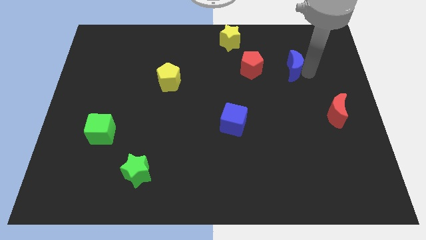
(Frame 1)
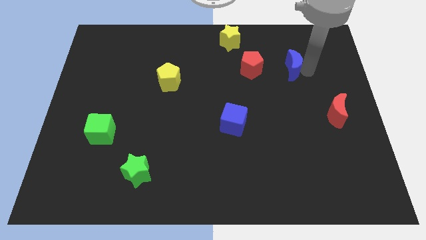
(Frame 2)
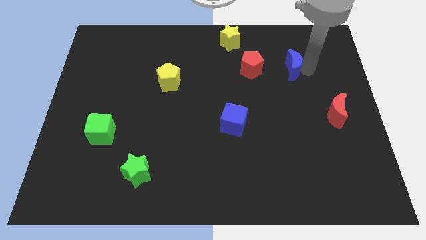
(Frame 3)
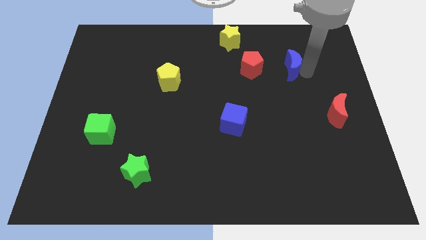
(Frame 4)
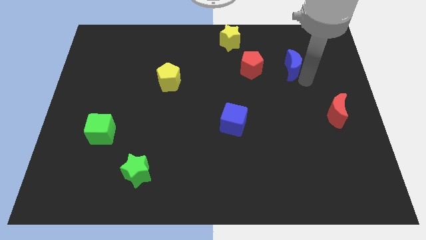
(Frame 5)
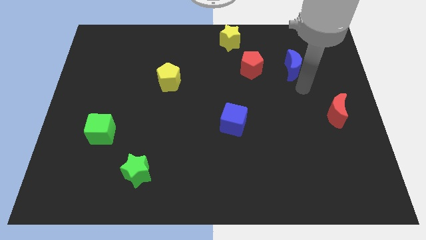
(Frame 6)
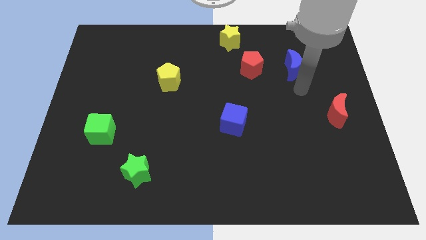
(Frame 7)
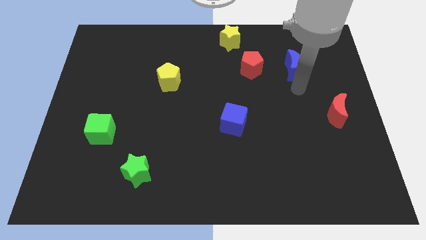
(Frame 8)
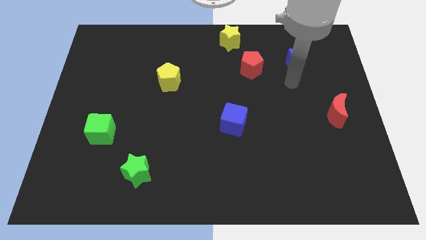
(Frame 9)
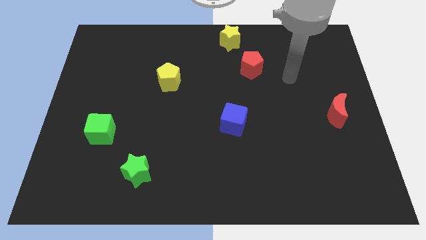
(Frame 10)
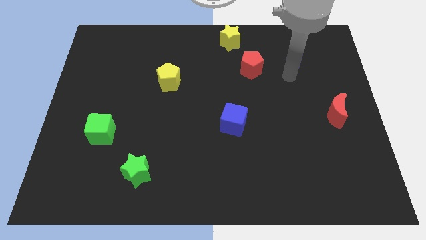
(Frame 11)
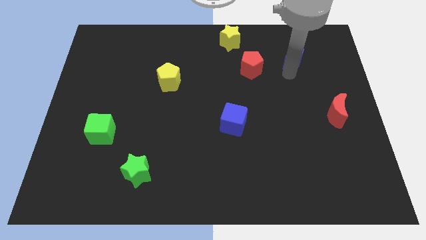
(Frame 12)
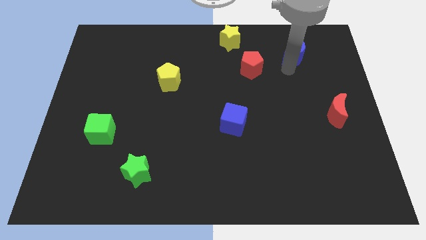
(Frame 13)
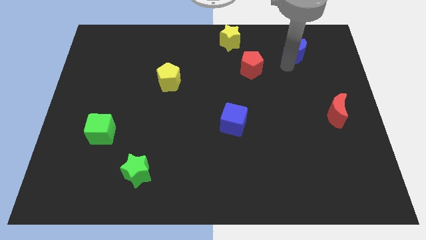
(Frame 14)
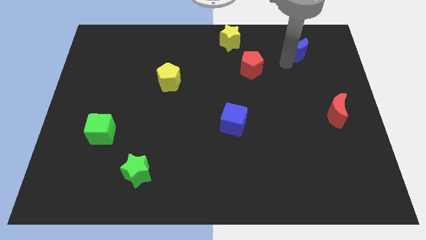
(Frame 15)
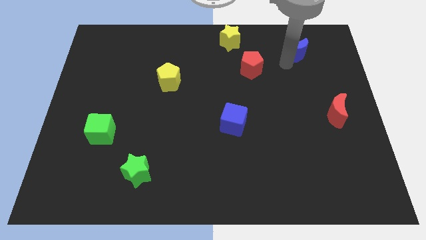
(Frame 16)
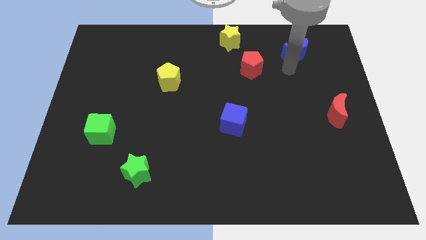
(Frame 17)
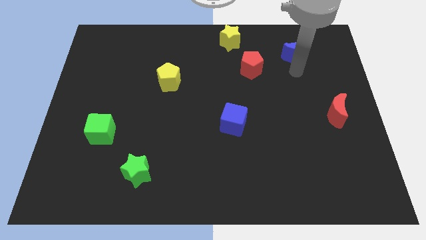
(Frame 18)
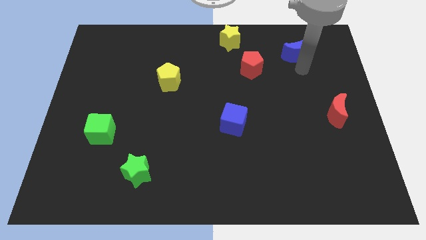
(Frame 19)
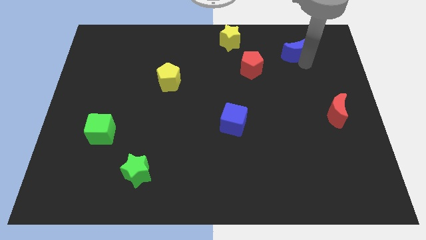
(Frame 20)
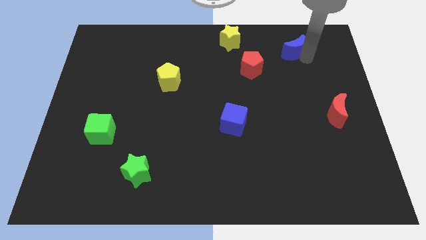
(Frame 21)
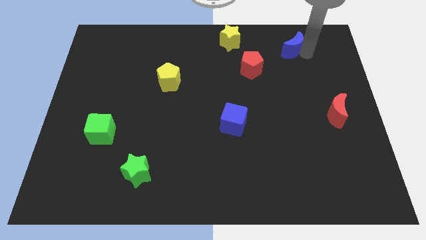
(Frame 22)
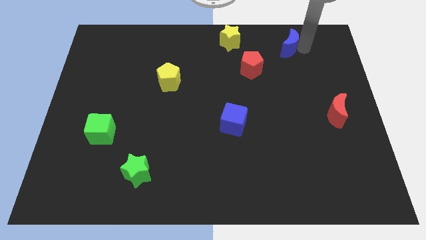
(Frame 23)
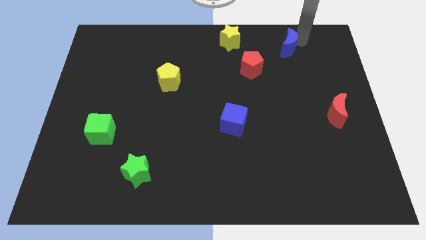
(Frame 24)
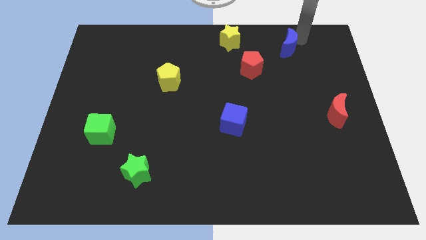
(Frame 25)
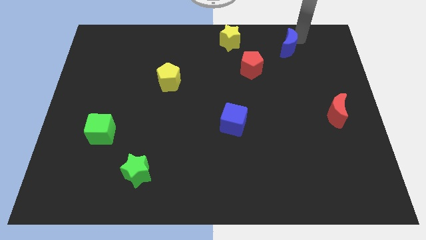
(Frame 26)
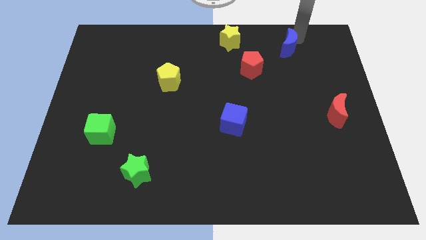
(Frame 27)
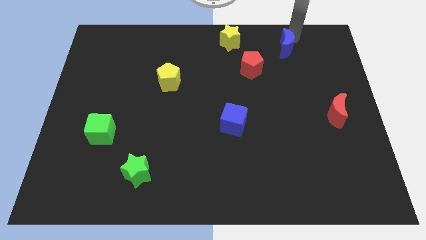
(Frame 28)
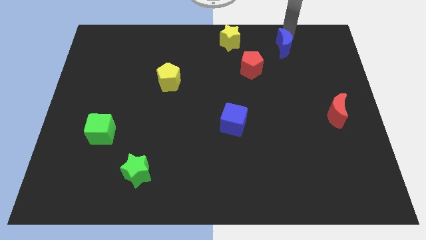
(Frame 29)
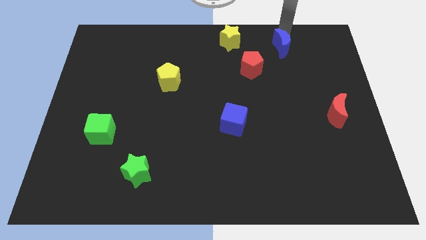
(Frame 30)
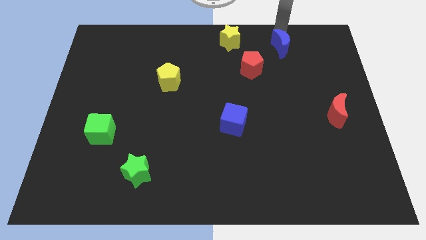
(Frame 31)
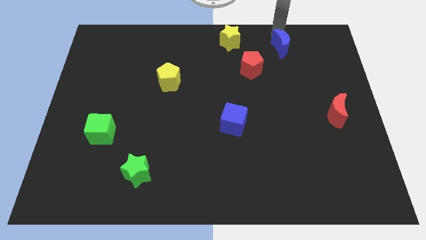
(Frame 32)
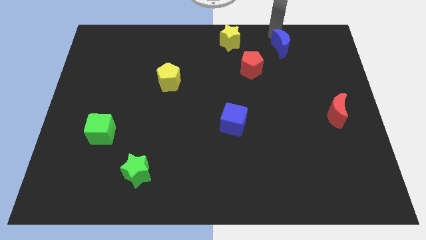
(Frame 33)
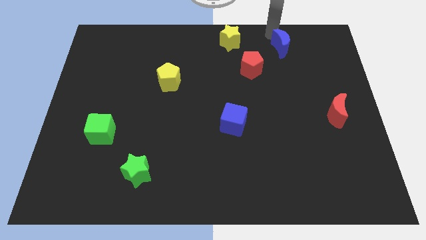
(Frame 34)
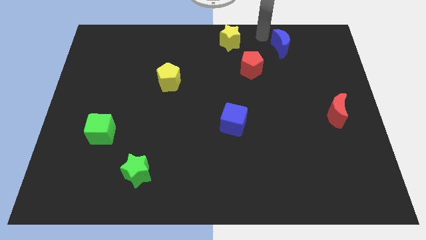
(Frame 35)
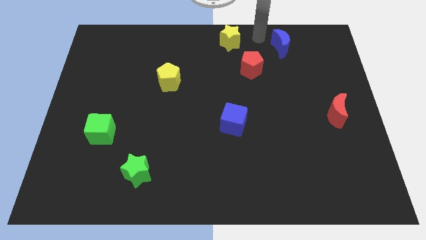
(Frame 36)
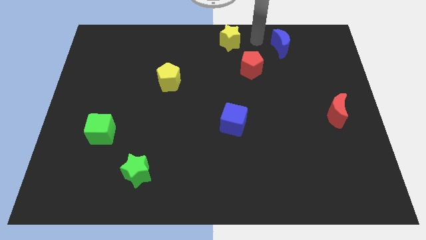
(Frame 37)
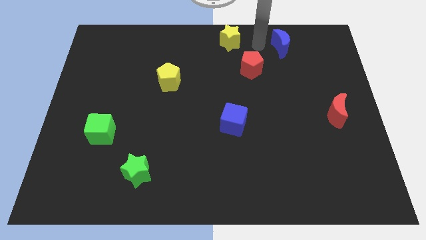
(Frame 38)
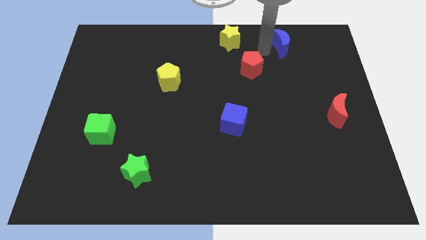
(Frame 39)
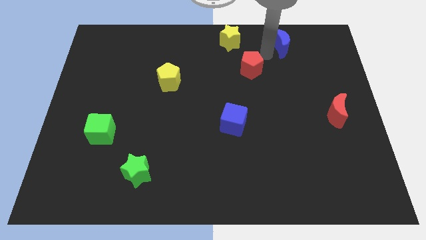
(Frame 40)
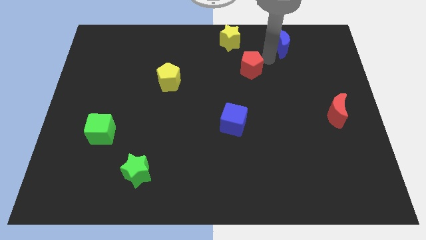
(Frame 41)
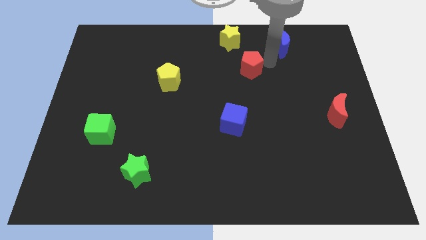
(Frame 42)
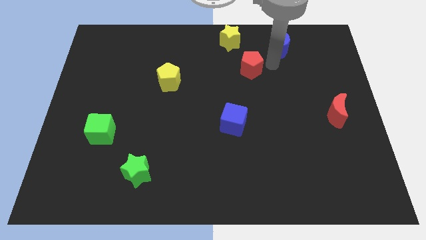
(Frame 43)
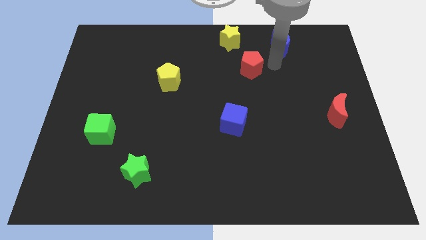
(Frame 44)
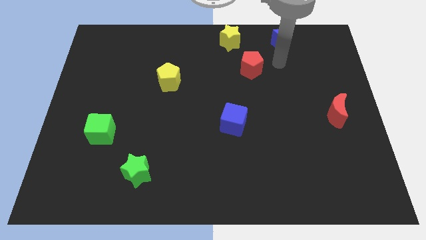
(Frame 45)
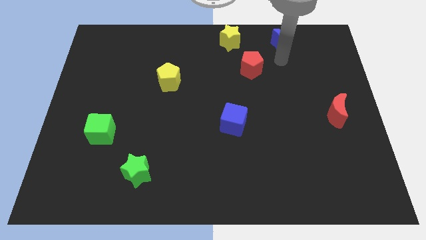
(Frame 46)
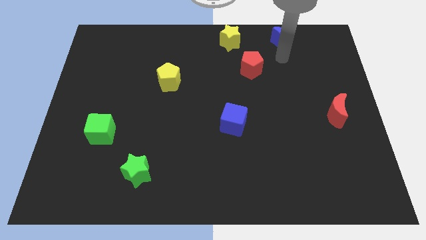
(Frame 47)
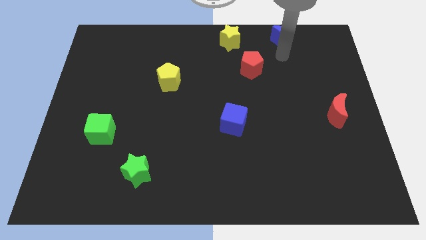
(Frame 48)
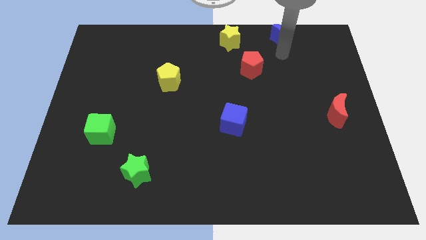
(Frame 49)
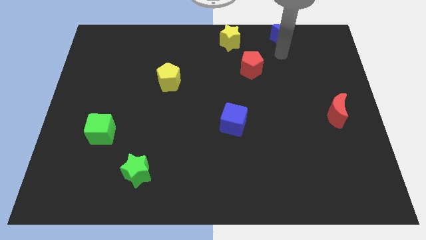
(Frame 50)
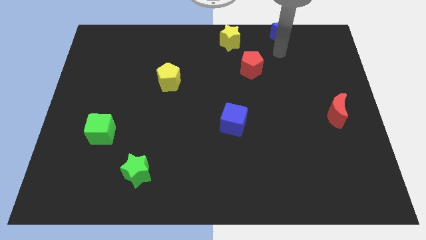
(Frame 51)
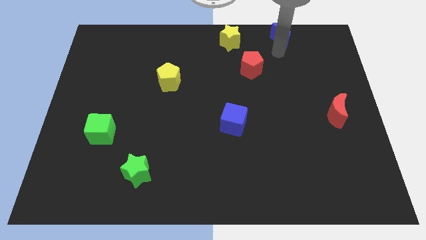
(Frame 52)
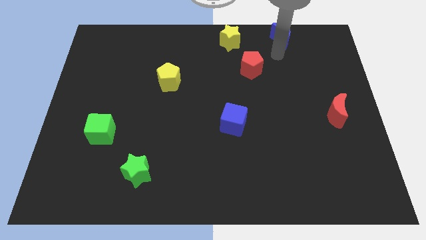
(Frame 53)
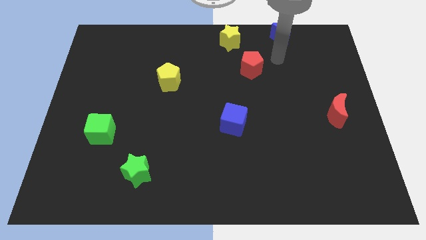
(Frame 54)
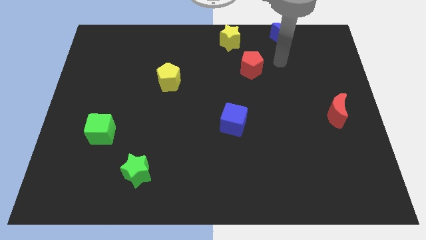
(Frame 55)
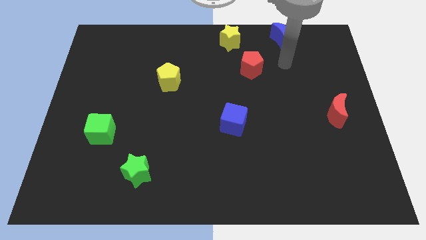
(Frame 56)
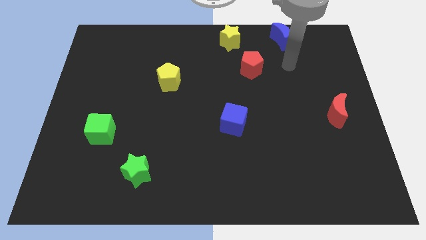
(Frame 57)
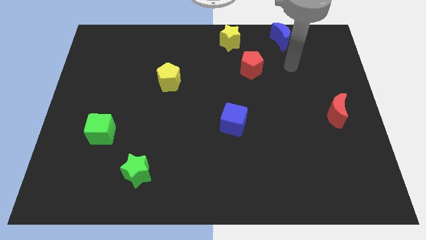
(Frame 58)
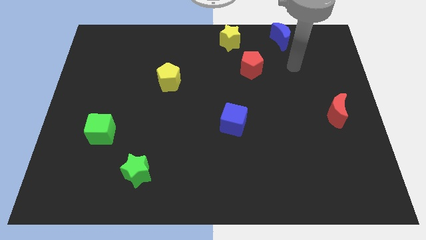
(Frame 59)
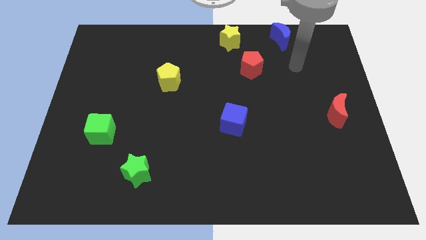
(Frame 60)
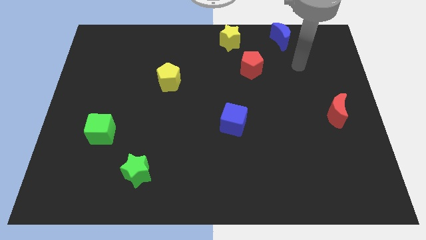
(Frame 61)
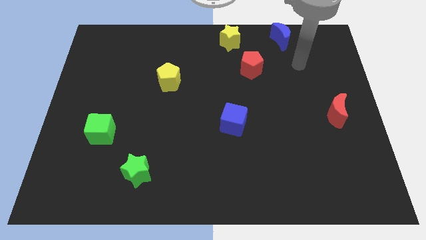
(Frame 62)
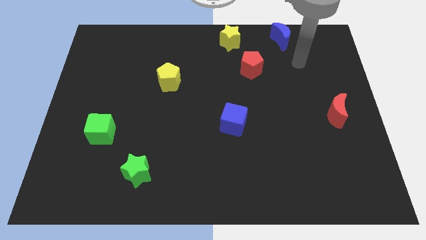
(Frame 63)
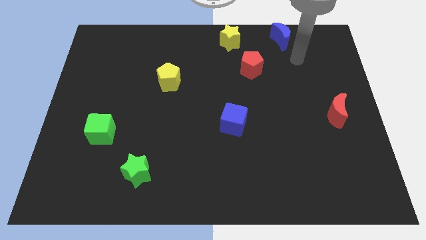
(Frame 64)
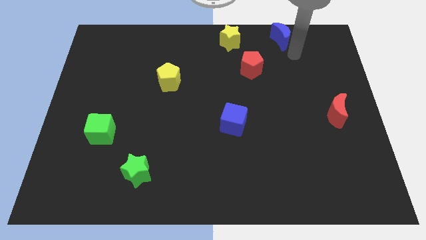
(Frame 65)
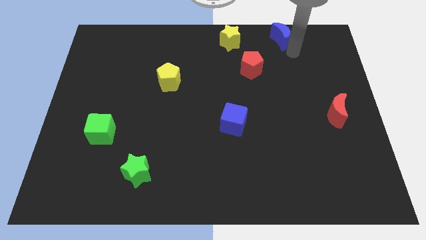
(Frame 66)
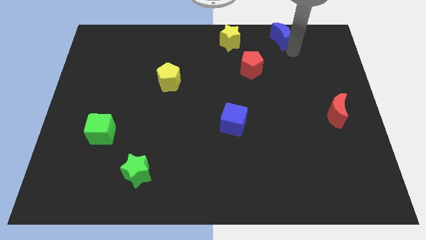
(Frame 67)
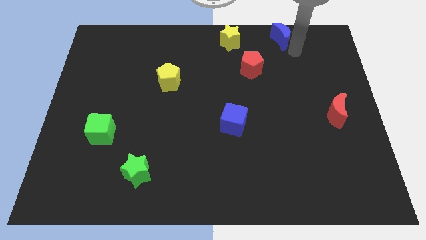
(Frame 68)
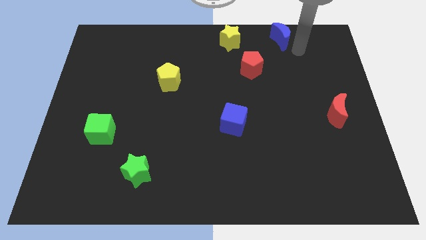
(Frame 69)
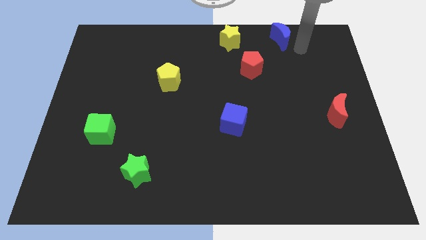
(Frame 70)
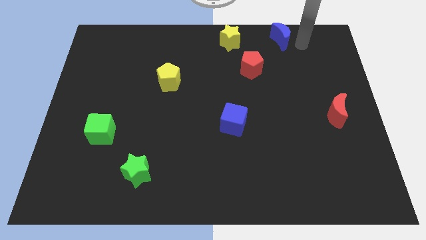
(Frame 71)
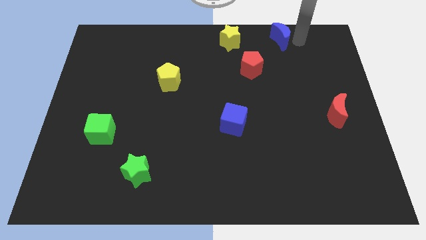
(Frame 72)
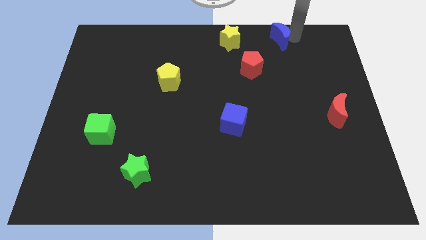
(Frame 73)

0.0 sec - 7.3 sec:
push the blue crescent to the right of the yellow star

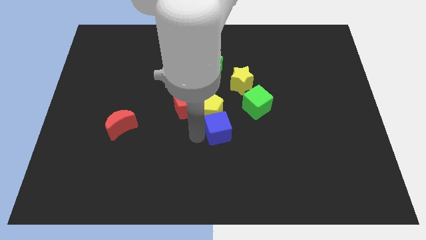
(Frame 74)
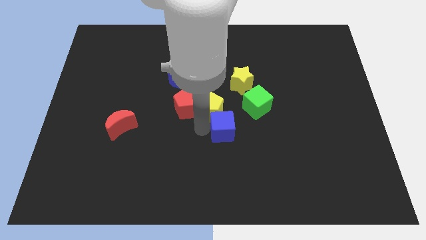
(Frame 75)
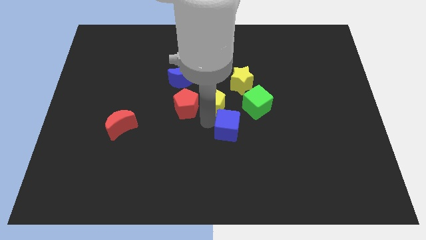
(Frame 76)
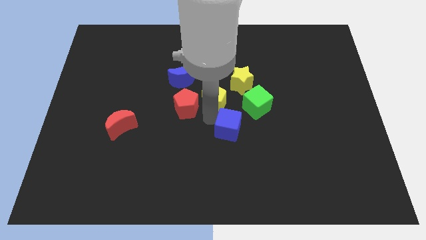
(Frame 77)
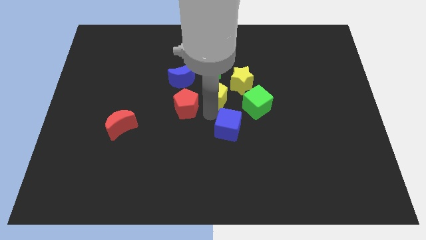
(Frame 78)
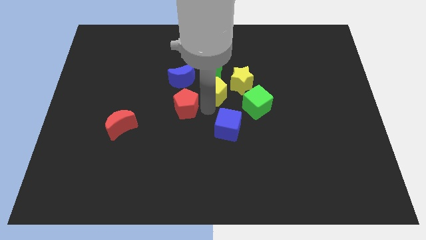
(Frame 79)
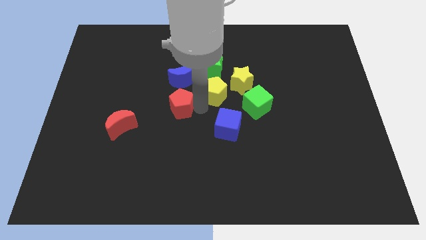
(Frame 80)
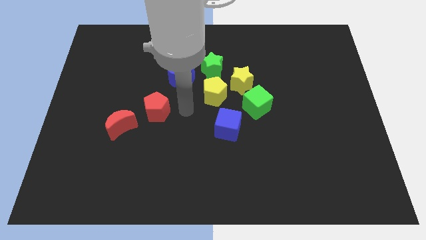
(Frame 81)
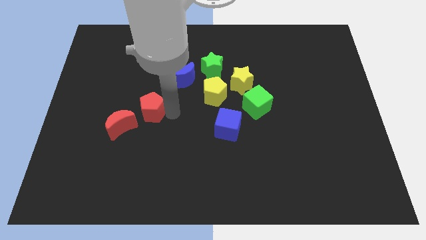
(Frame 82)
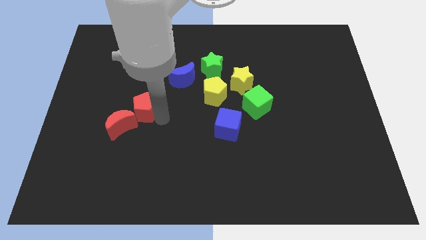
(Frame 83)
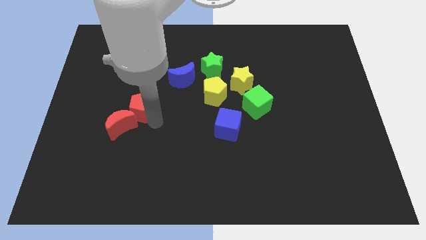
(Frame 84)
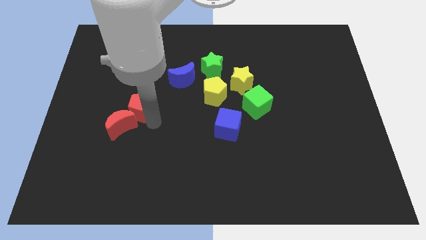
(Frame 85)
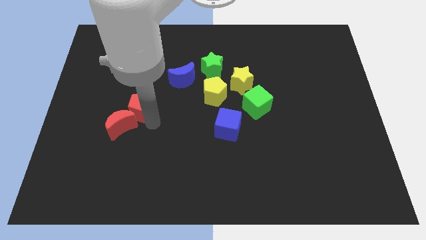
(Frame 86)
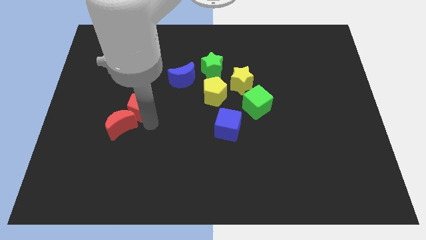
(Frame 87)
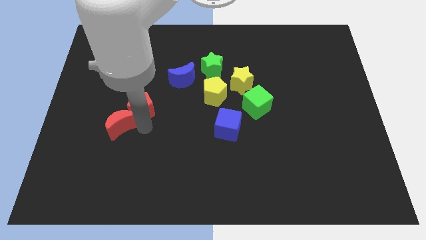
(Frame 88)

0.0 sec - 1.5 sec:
move red pentagon close to red moon

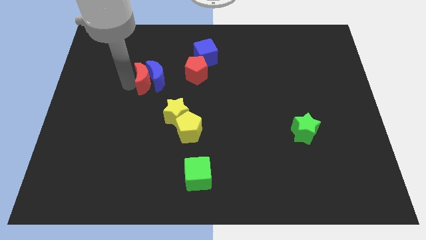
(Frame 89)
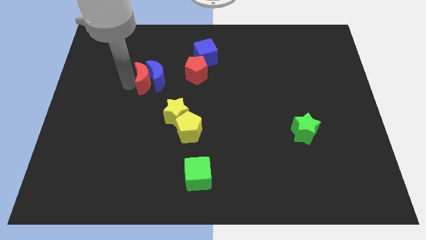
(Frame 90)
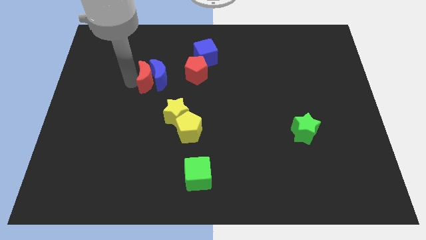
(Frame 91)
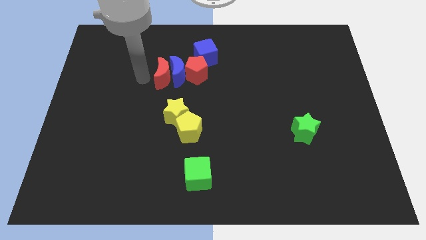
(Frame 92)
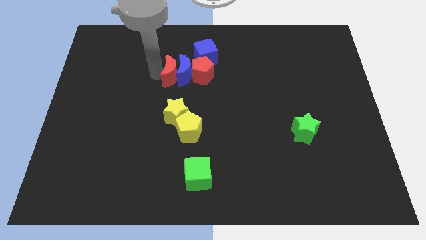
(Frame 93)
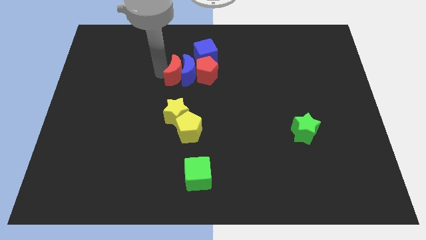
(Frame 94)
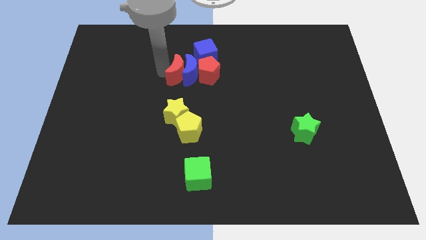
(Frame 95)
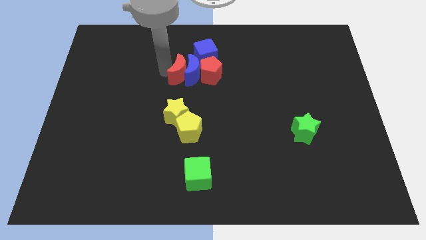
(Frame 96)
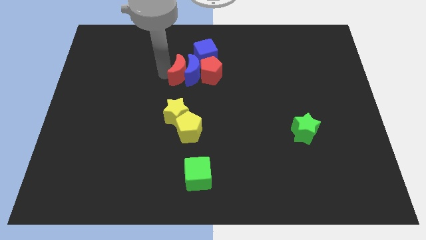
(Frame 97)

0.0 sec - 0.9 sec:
push the red crescent into the red pentagon along with the blue crescent
